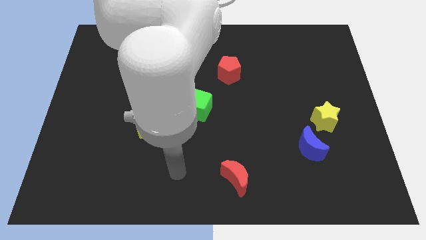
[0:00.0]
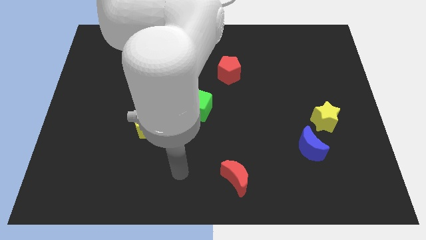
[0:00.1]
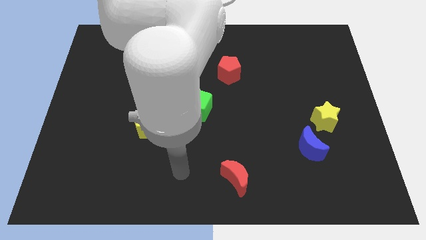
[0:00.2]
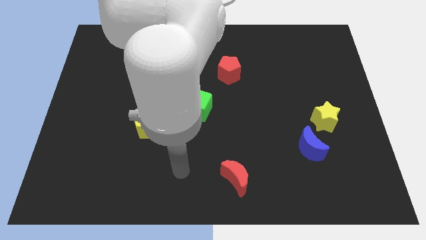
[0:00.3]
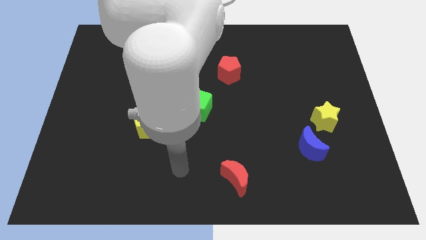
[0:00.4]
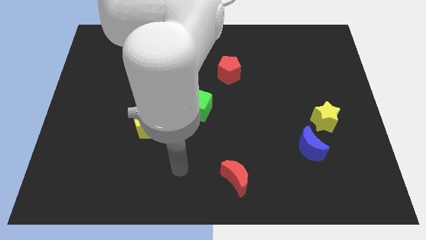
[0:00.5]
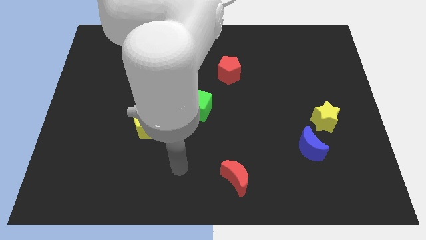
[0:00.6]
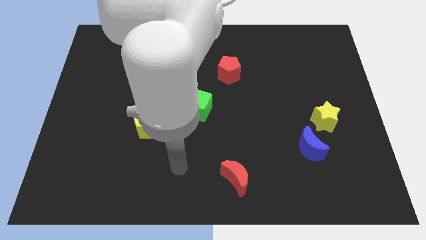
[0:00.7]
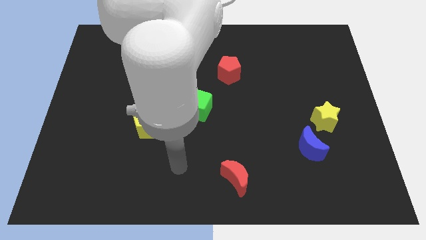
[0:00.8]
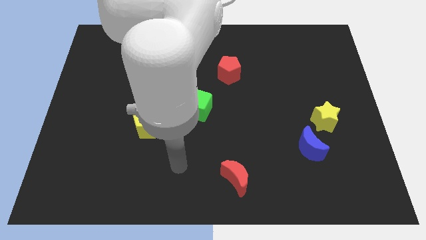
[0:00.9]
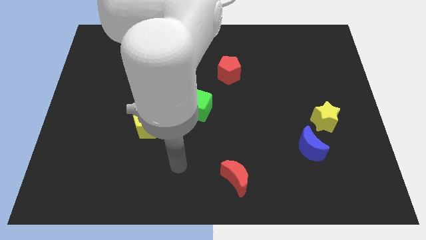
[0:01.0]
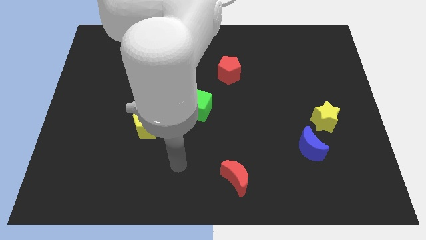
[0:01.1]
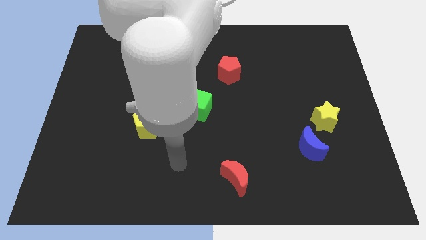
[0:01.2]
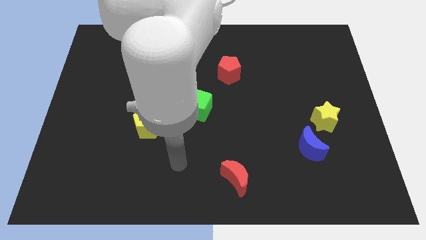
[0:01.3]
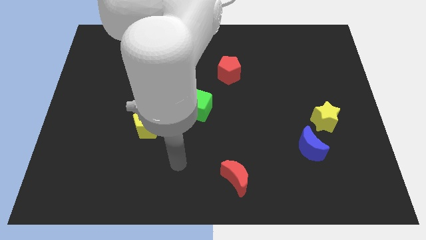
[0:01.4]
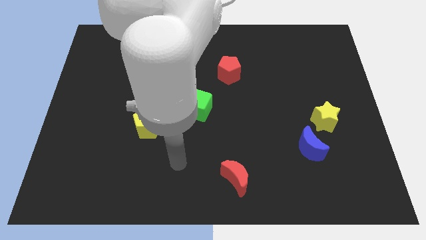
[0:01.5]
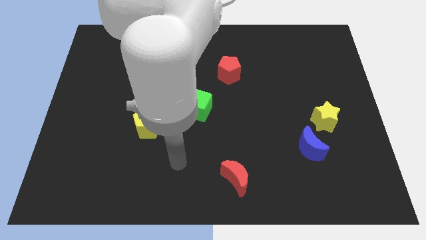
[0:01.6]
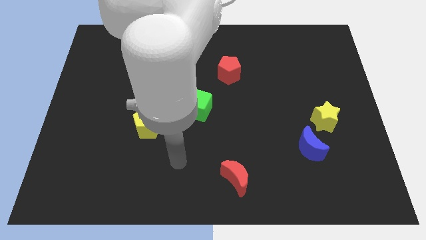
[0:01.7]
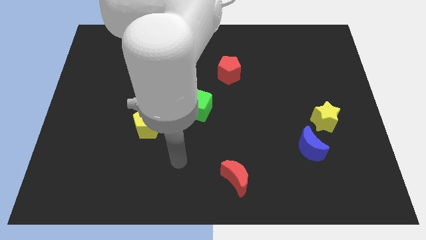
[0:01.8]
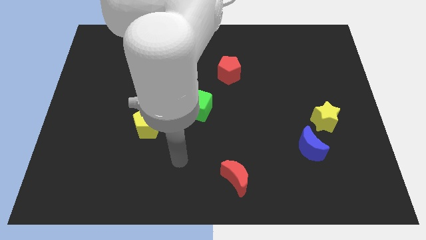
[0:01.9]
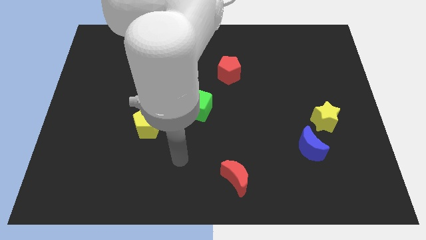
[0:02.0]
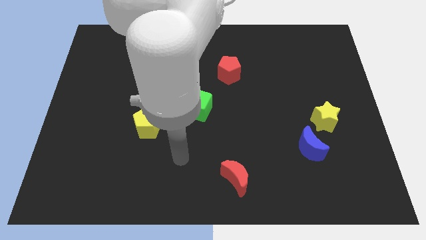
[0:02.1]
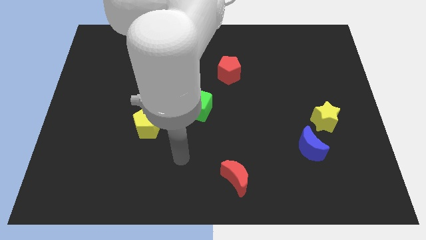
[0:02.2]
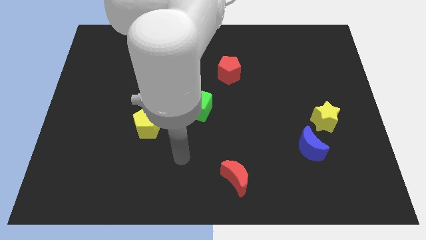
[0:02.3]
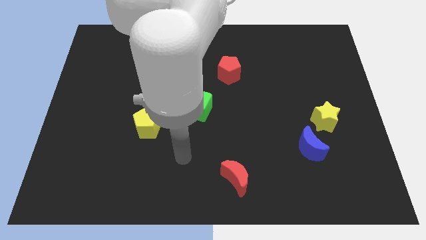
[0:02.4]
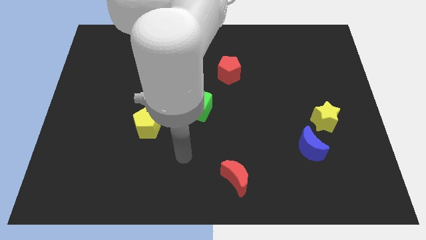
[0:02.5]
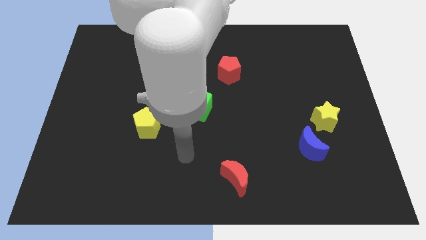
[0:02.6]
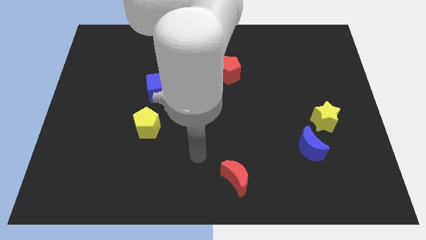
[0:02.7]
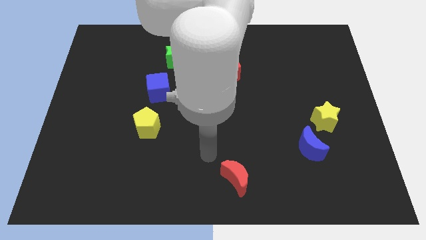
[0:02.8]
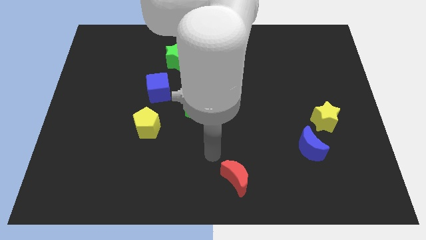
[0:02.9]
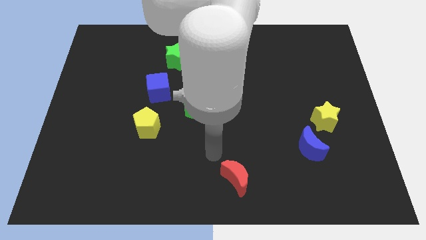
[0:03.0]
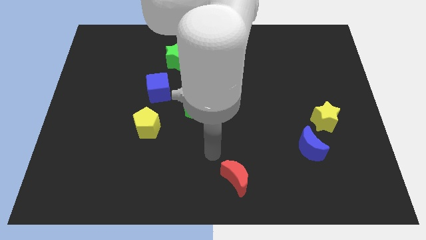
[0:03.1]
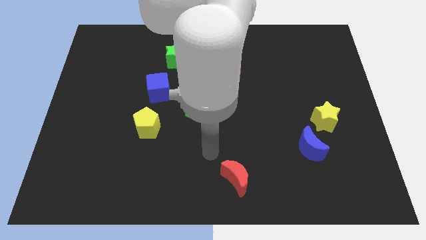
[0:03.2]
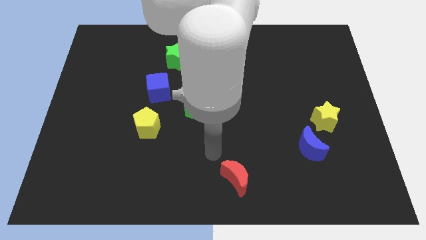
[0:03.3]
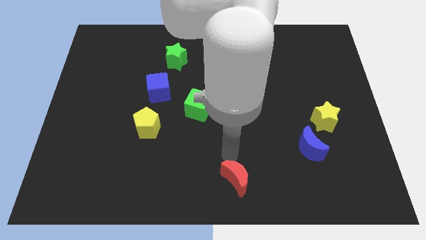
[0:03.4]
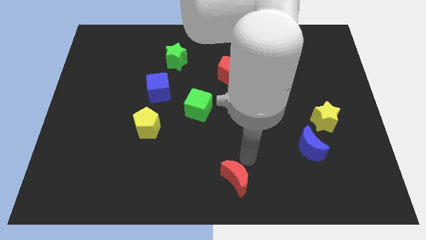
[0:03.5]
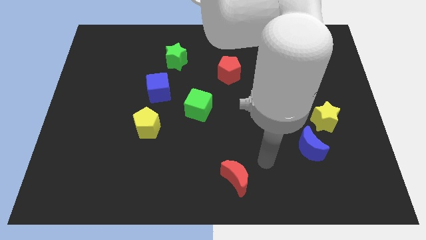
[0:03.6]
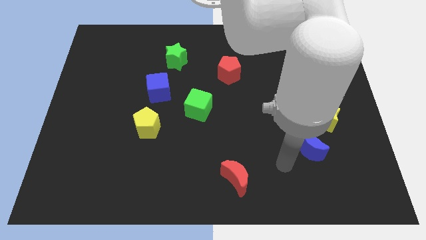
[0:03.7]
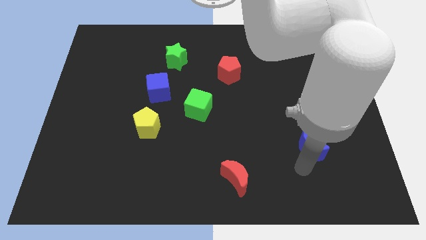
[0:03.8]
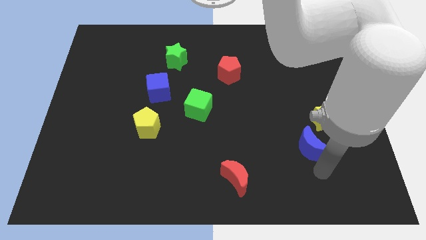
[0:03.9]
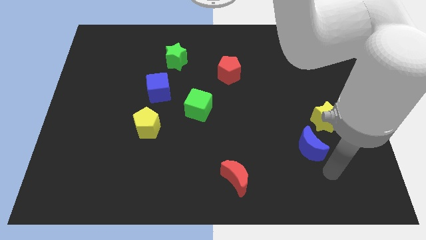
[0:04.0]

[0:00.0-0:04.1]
move the arm close to the blue moon

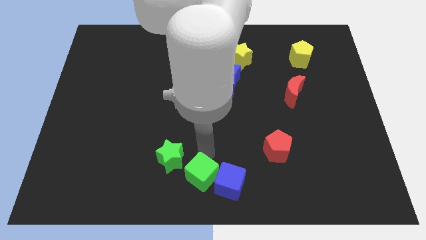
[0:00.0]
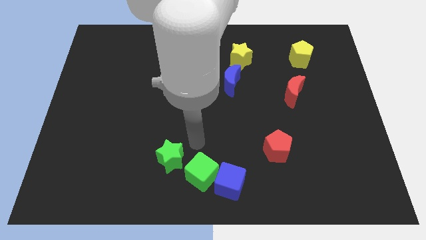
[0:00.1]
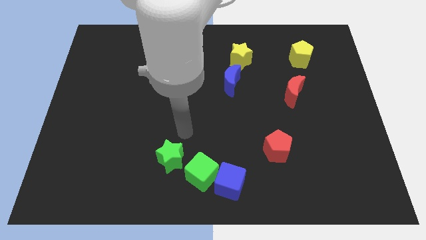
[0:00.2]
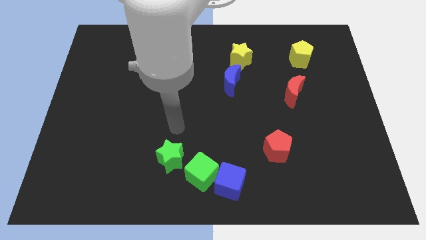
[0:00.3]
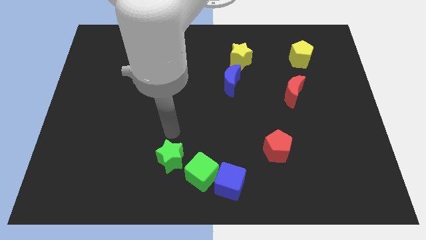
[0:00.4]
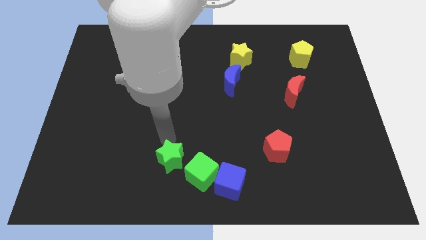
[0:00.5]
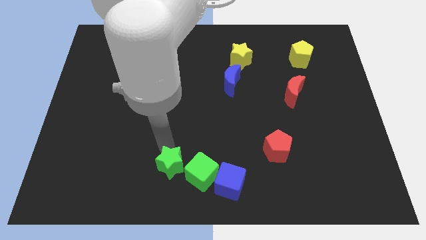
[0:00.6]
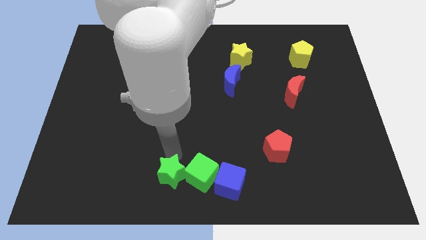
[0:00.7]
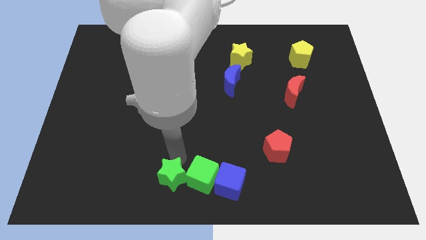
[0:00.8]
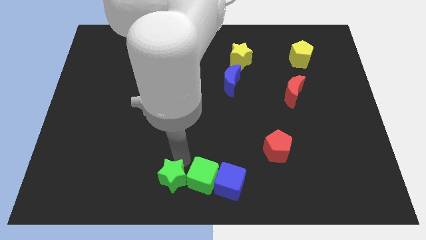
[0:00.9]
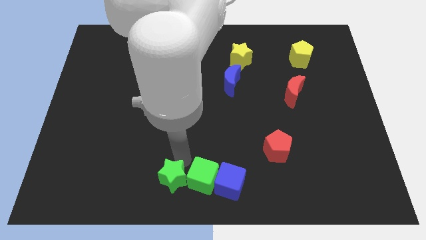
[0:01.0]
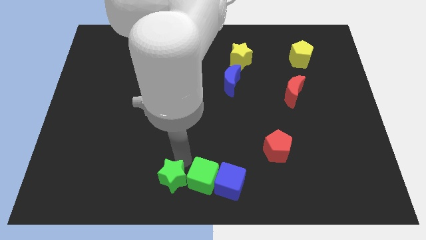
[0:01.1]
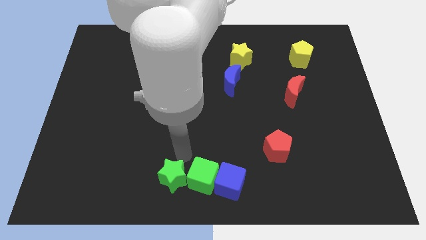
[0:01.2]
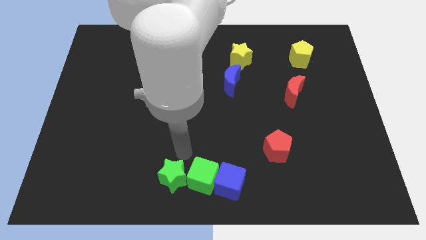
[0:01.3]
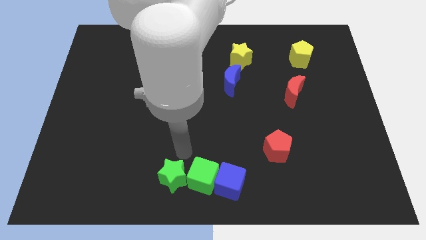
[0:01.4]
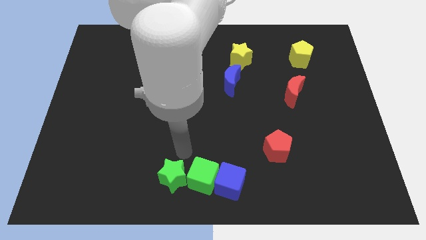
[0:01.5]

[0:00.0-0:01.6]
move the green star left to the green cube

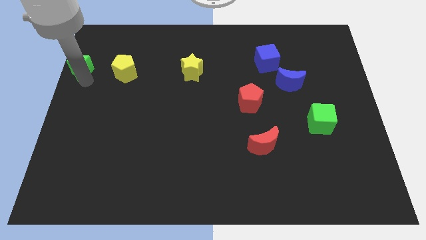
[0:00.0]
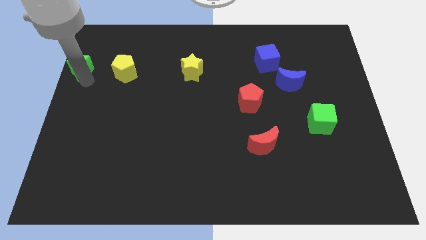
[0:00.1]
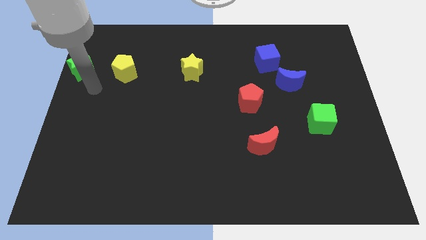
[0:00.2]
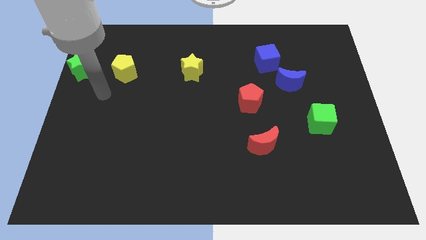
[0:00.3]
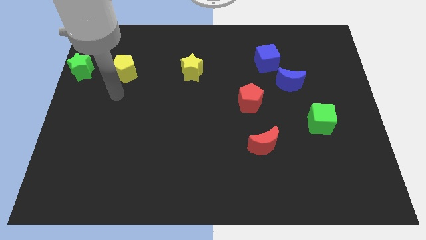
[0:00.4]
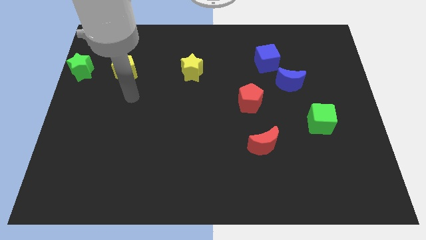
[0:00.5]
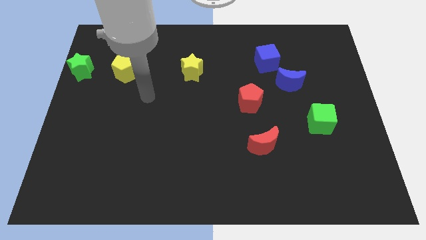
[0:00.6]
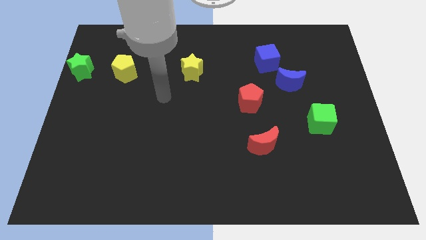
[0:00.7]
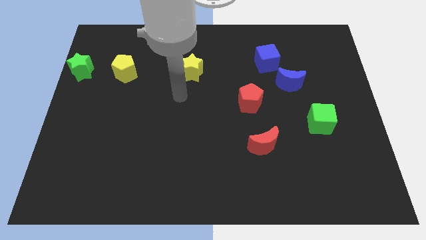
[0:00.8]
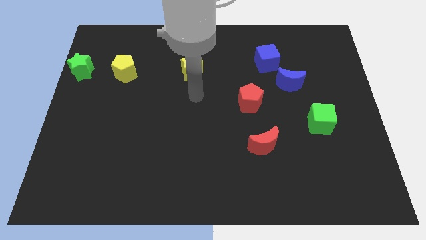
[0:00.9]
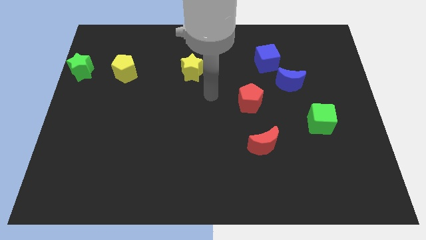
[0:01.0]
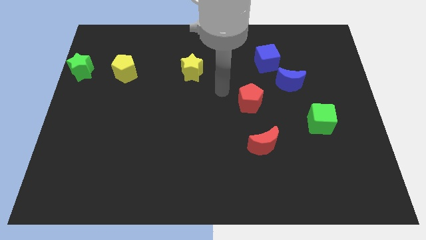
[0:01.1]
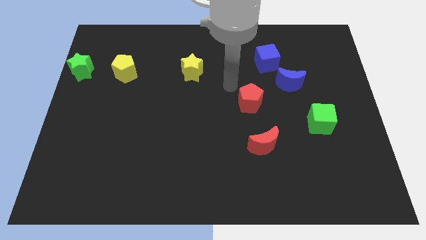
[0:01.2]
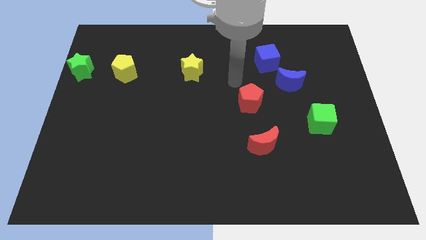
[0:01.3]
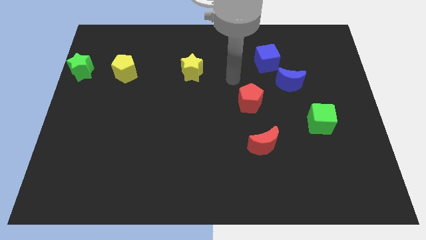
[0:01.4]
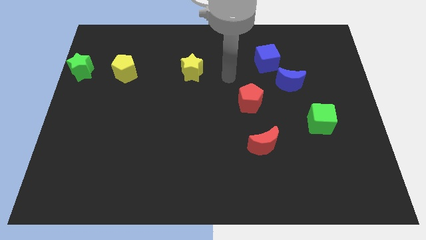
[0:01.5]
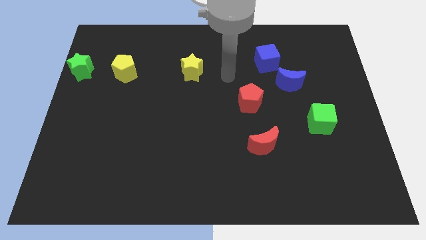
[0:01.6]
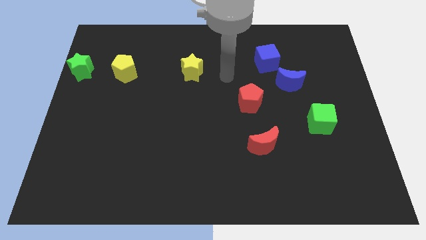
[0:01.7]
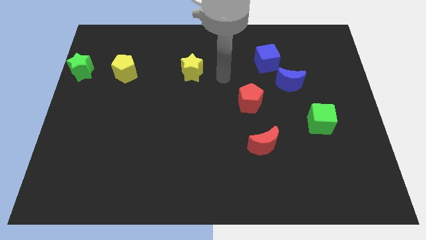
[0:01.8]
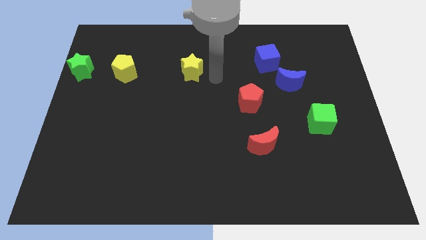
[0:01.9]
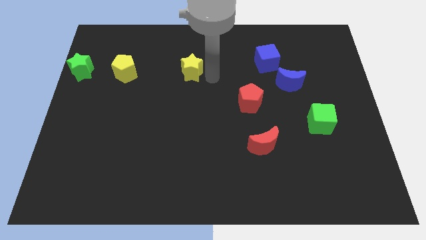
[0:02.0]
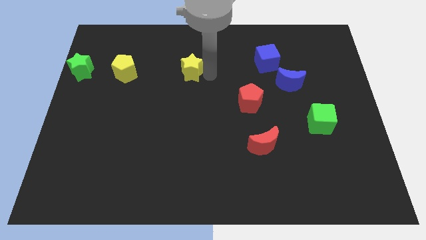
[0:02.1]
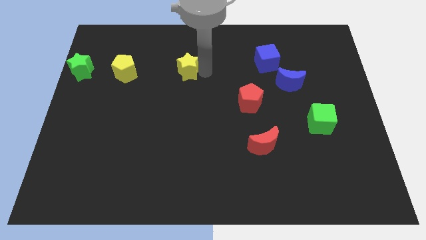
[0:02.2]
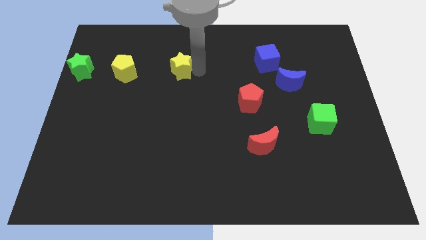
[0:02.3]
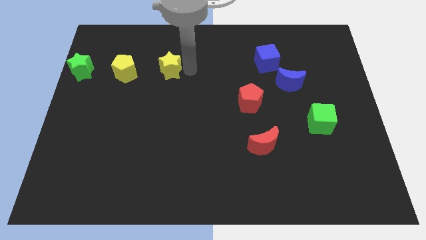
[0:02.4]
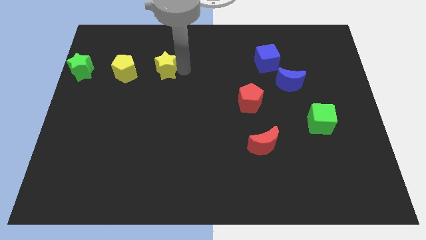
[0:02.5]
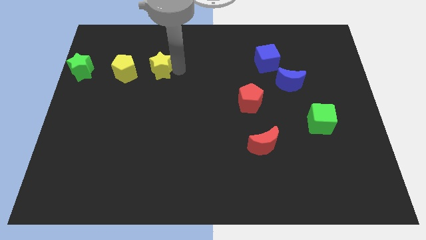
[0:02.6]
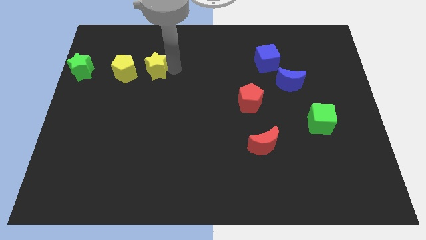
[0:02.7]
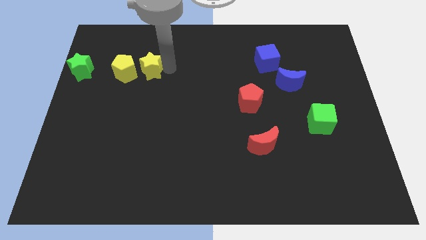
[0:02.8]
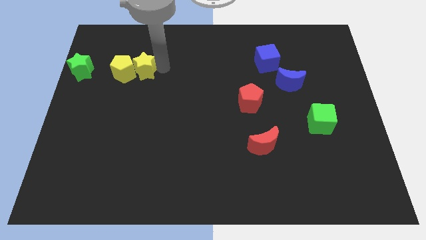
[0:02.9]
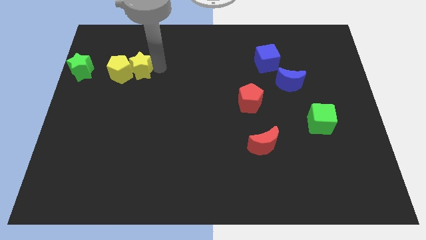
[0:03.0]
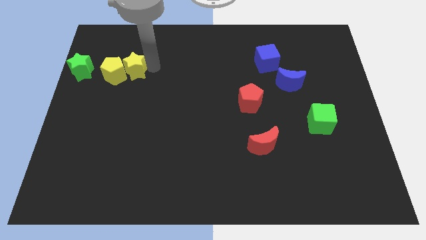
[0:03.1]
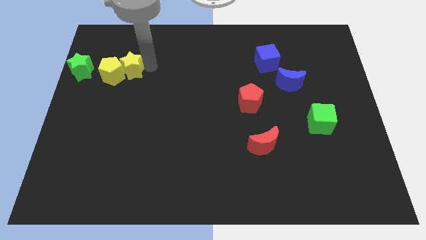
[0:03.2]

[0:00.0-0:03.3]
push the yellow star into the yellow pentagon
